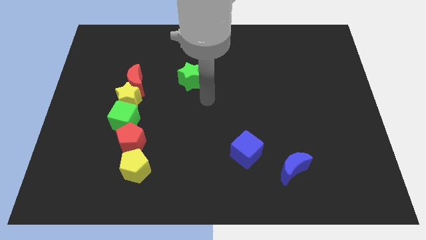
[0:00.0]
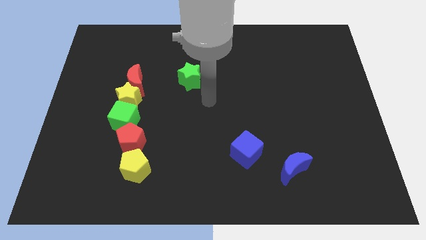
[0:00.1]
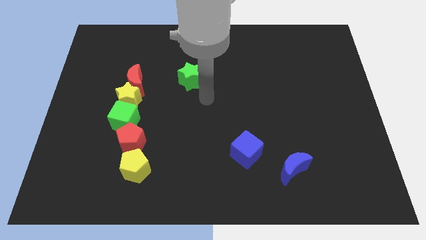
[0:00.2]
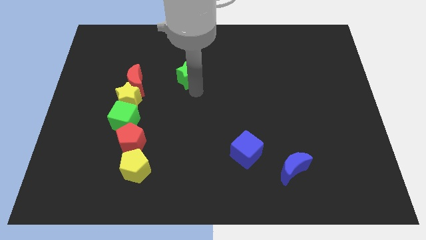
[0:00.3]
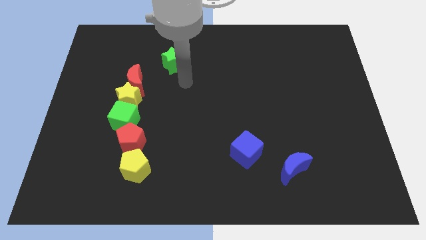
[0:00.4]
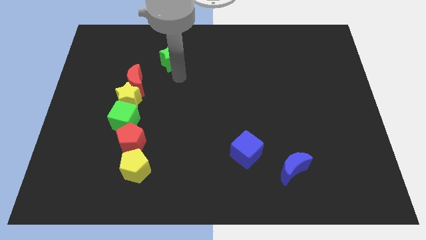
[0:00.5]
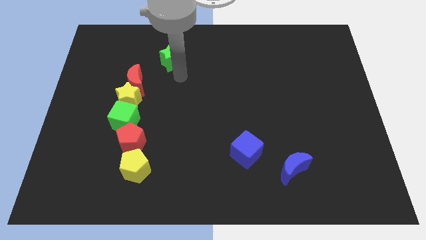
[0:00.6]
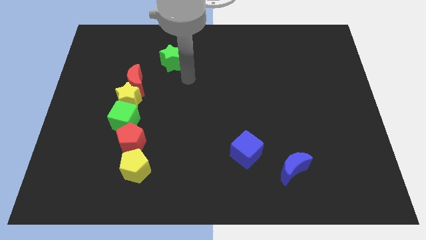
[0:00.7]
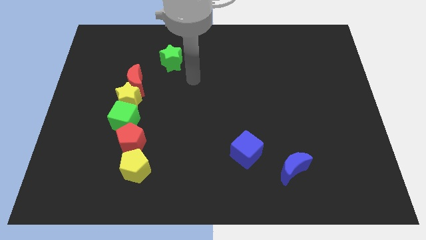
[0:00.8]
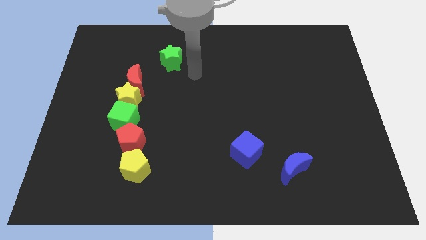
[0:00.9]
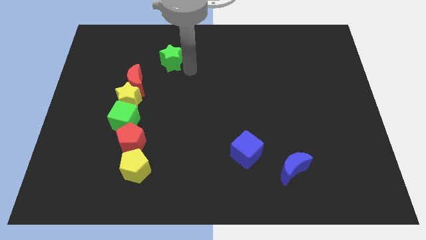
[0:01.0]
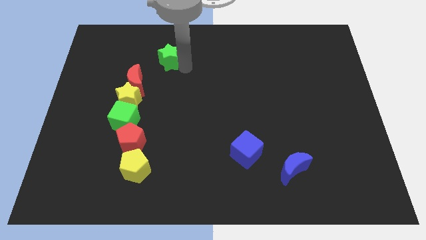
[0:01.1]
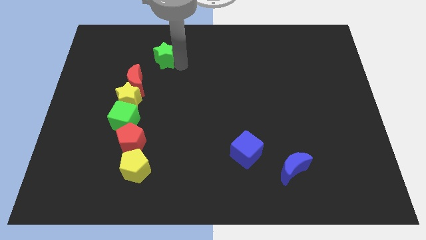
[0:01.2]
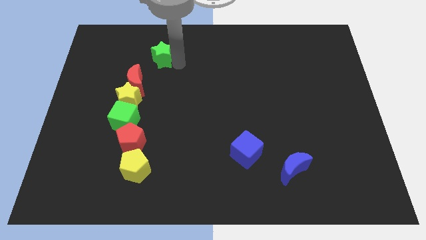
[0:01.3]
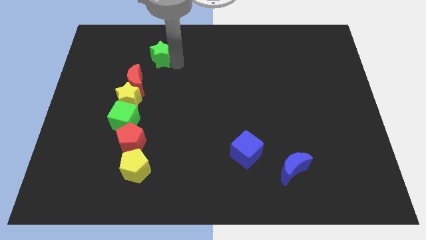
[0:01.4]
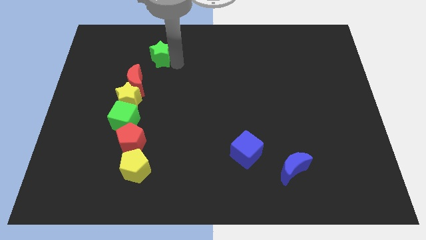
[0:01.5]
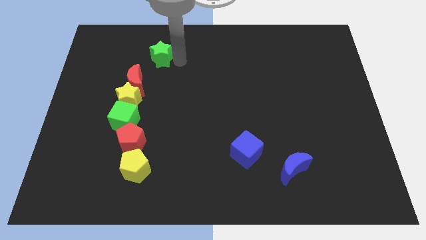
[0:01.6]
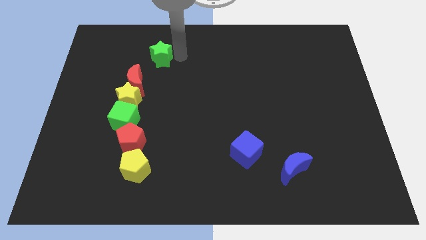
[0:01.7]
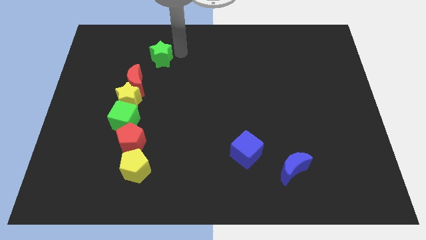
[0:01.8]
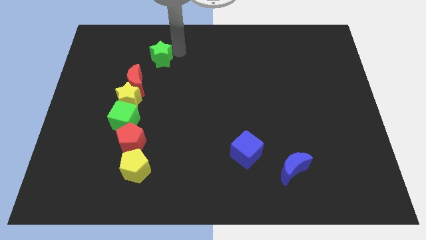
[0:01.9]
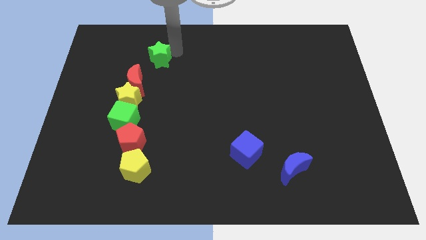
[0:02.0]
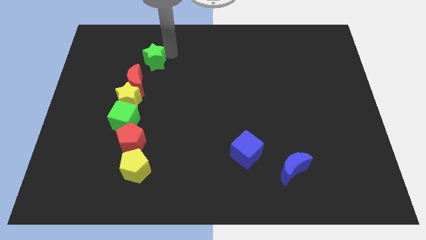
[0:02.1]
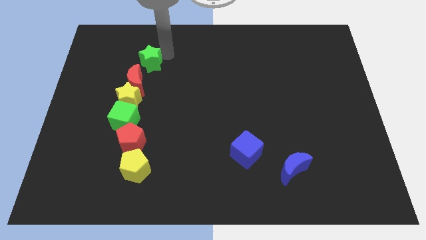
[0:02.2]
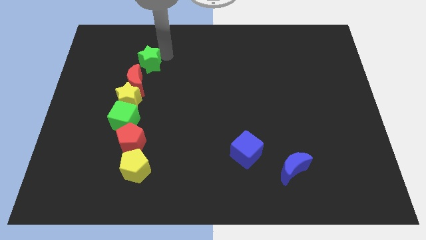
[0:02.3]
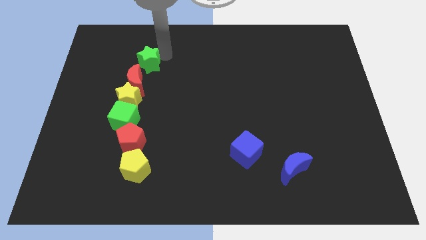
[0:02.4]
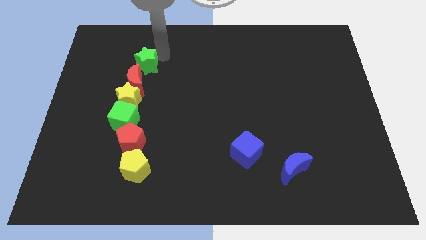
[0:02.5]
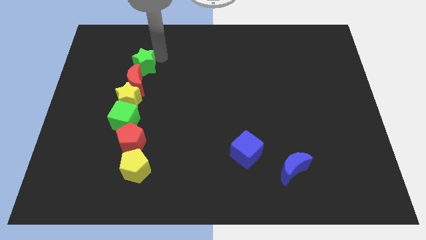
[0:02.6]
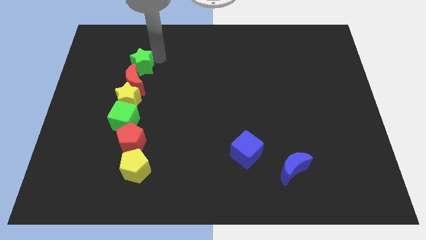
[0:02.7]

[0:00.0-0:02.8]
push the green star into the red moon

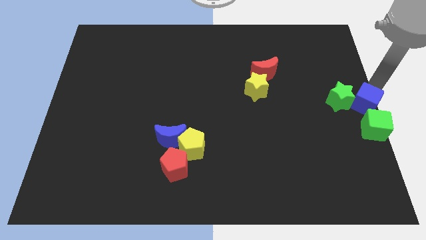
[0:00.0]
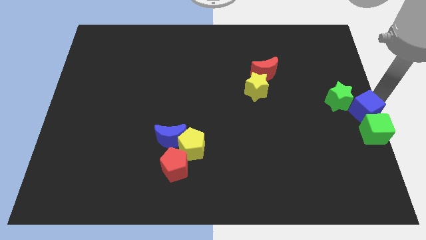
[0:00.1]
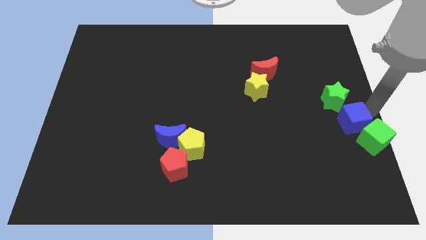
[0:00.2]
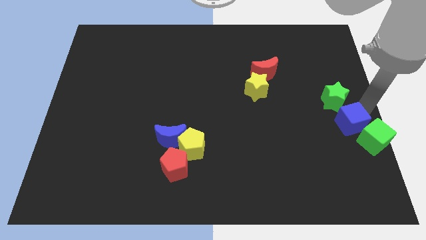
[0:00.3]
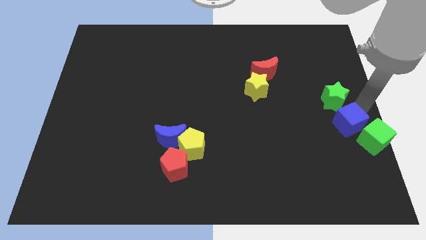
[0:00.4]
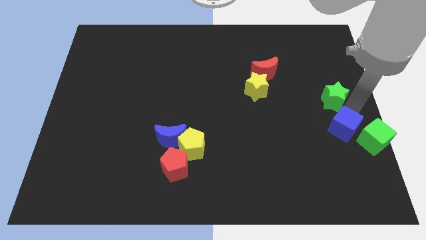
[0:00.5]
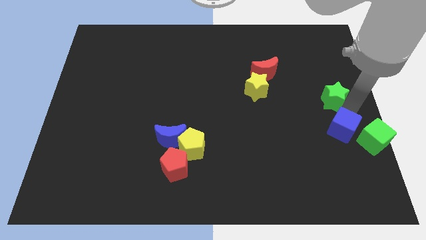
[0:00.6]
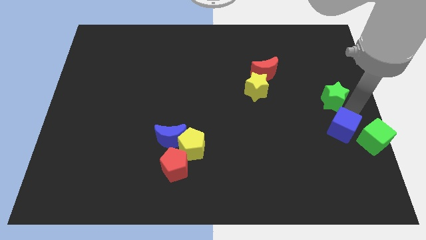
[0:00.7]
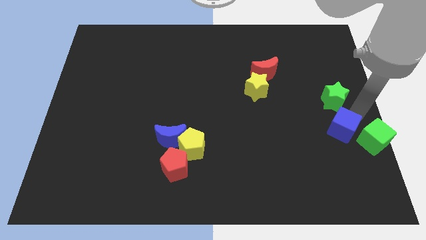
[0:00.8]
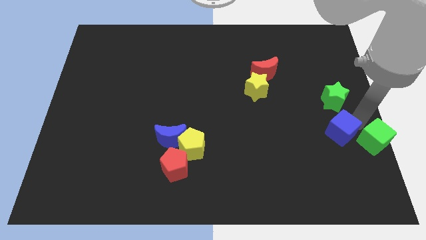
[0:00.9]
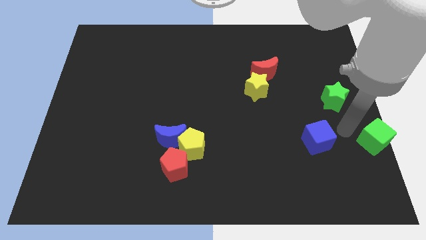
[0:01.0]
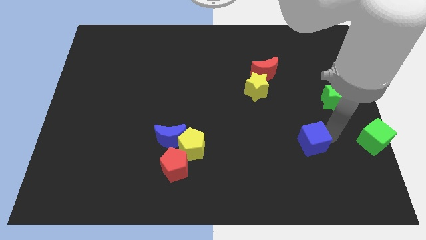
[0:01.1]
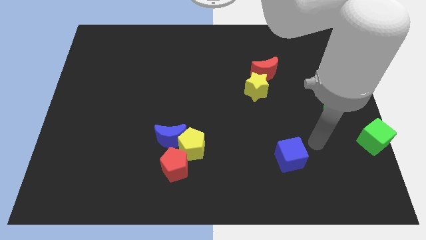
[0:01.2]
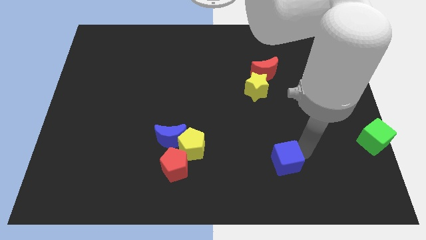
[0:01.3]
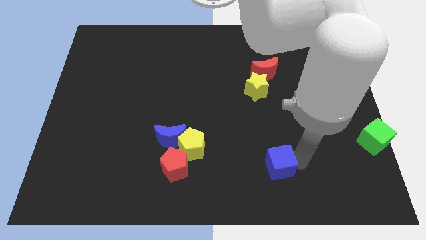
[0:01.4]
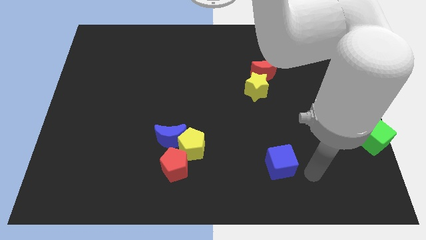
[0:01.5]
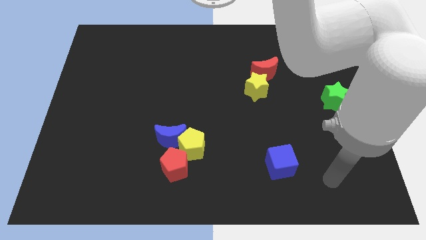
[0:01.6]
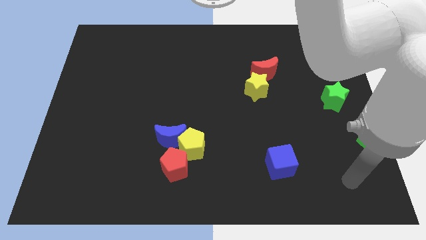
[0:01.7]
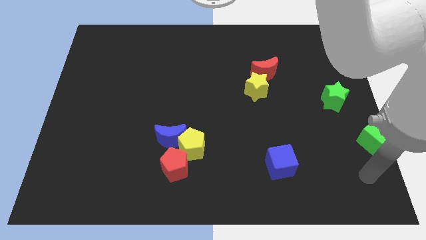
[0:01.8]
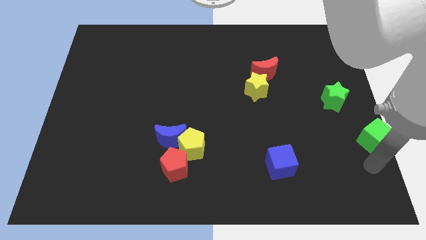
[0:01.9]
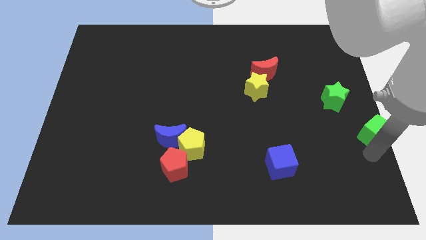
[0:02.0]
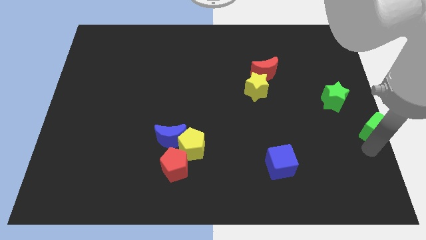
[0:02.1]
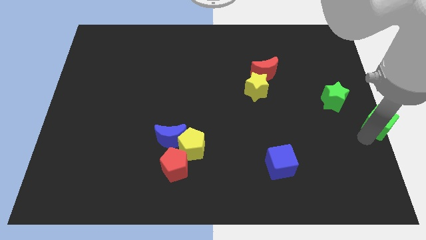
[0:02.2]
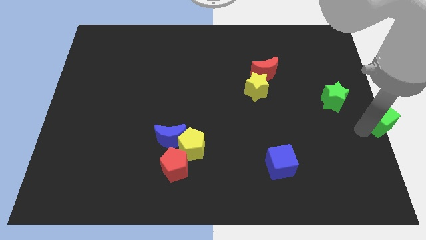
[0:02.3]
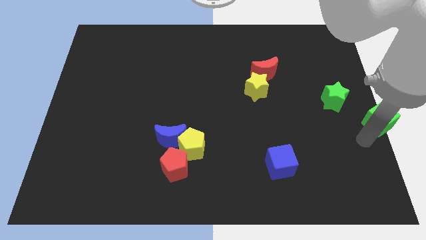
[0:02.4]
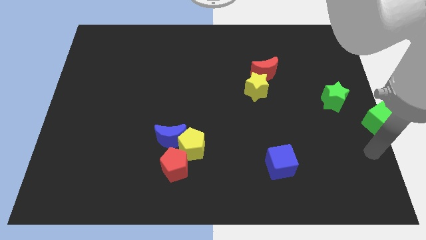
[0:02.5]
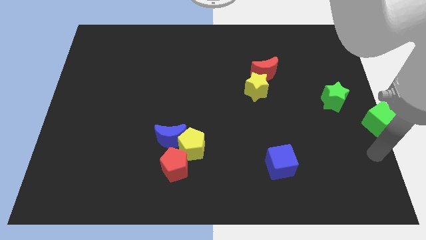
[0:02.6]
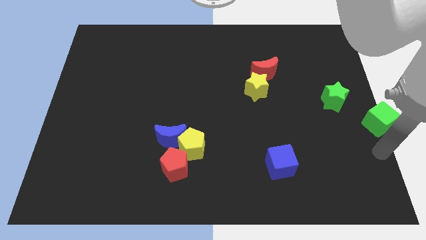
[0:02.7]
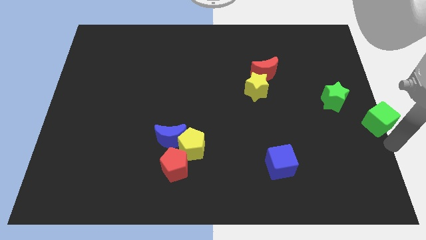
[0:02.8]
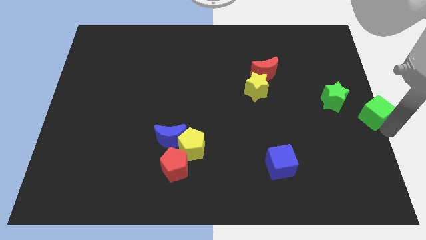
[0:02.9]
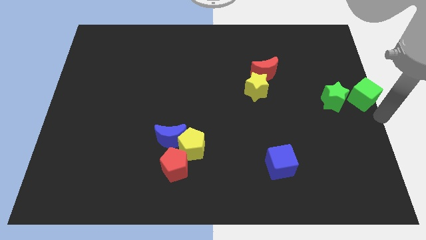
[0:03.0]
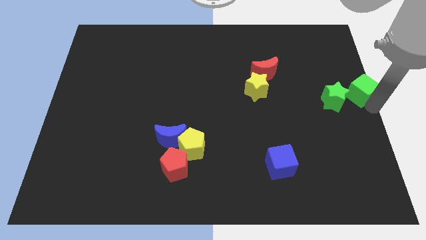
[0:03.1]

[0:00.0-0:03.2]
separate the blue cube from the green cube

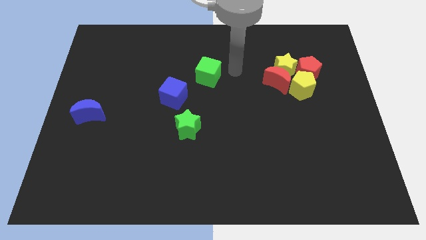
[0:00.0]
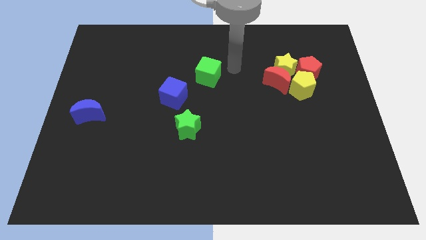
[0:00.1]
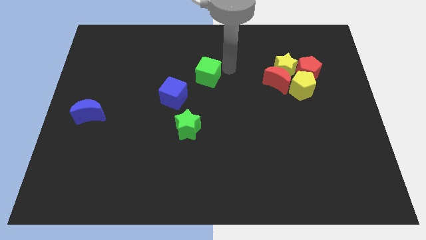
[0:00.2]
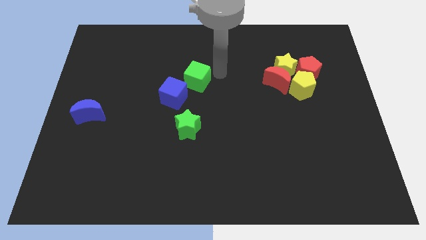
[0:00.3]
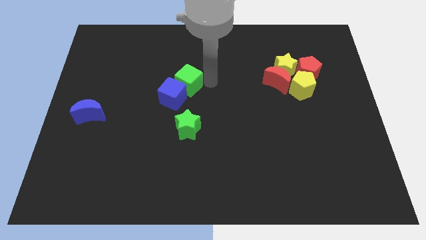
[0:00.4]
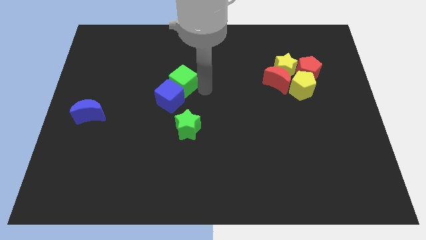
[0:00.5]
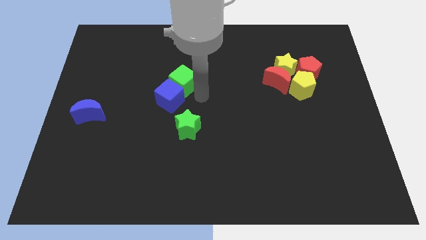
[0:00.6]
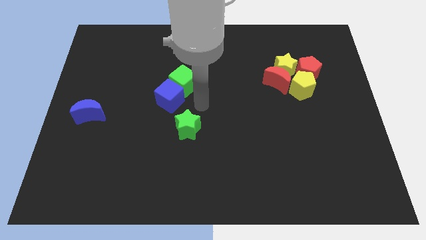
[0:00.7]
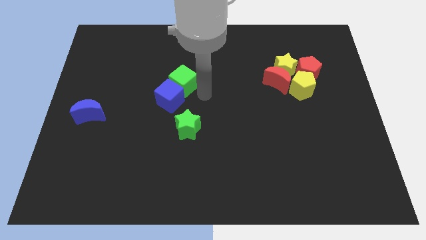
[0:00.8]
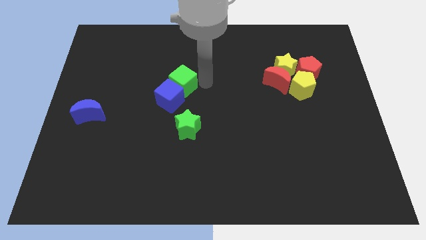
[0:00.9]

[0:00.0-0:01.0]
push green cube into the blue cube

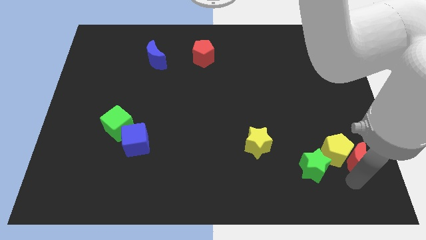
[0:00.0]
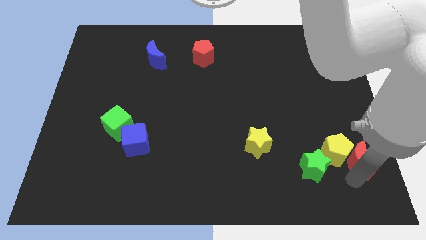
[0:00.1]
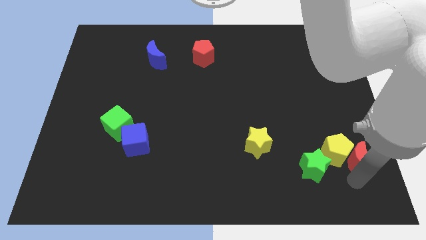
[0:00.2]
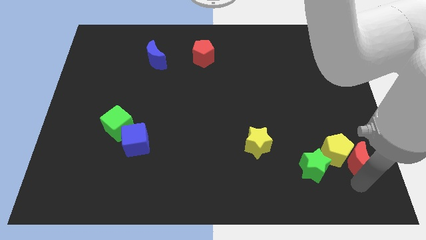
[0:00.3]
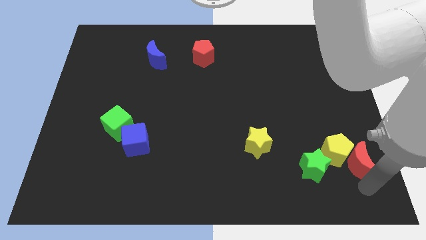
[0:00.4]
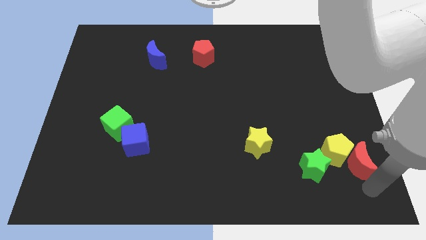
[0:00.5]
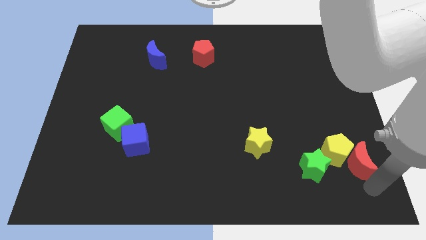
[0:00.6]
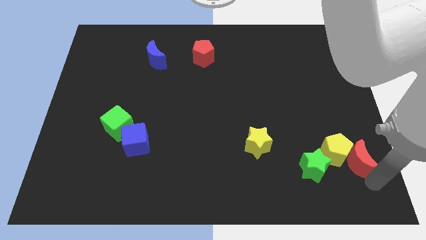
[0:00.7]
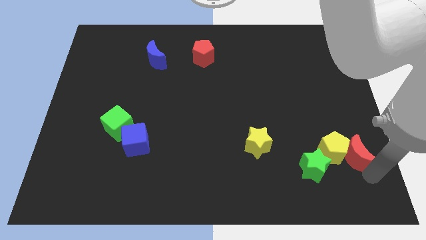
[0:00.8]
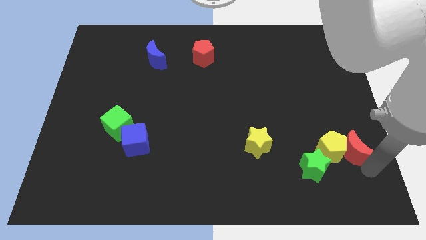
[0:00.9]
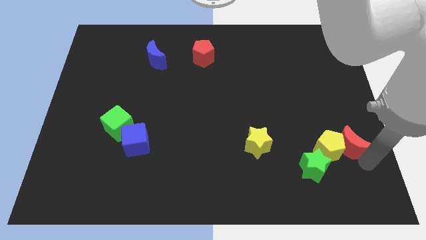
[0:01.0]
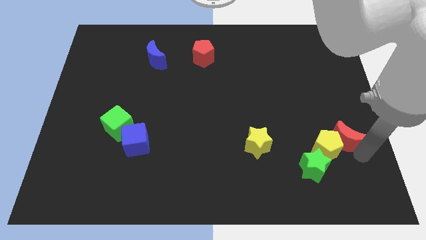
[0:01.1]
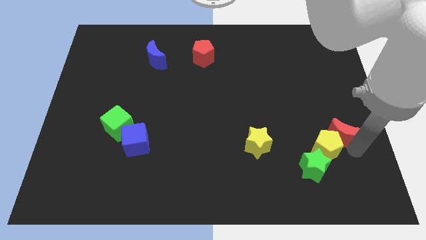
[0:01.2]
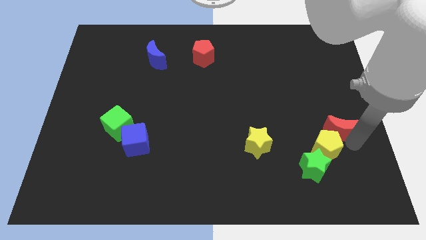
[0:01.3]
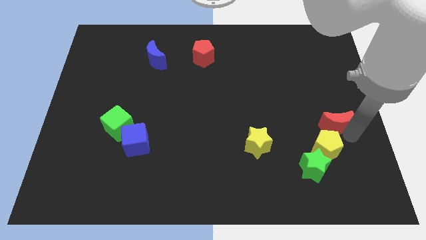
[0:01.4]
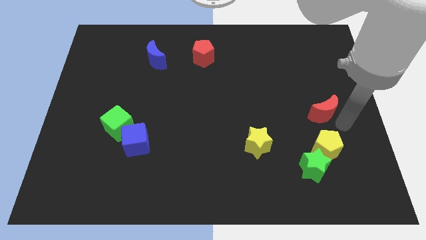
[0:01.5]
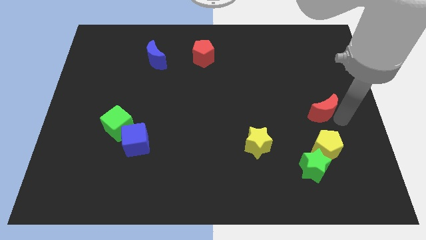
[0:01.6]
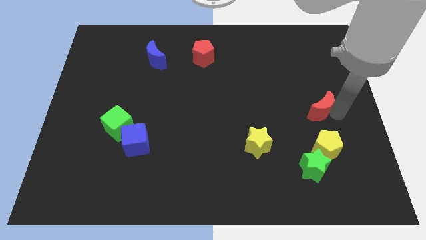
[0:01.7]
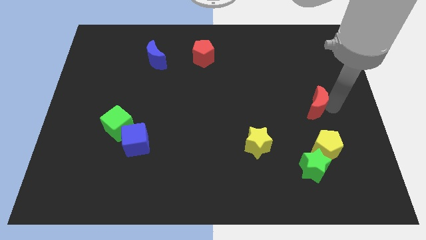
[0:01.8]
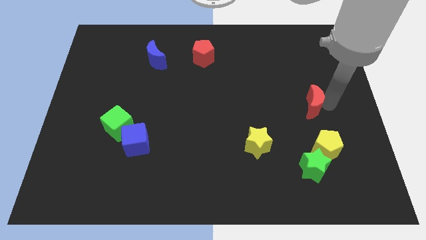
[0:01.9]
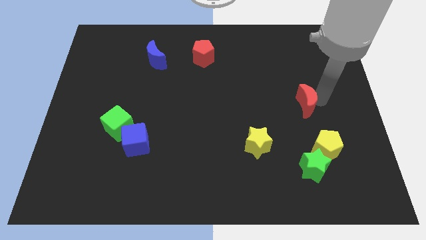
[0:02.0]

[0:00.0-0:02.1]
separate red moon from yellow pentagon

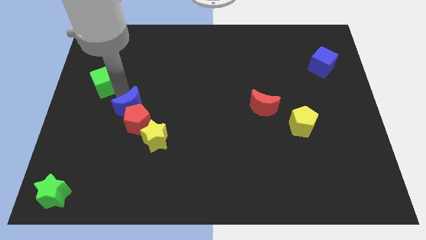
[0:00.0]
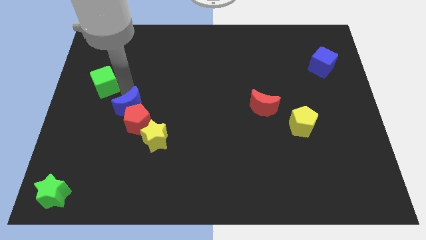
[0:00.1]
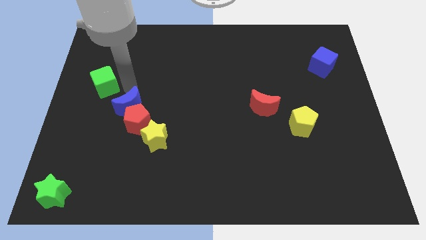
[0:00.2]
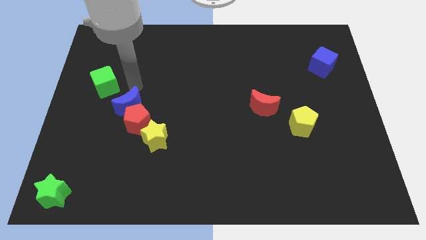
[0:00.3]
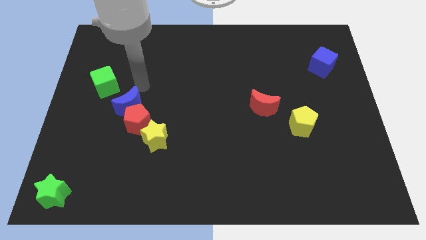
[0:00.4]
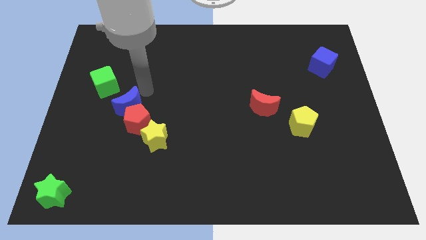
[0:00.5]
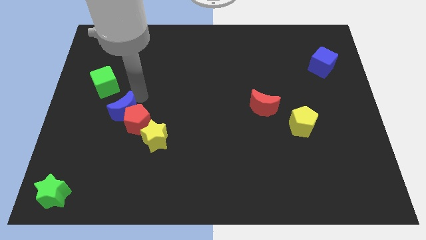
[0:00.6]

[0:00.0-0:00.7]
place the blue moon in between the green cube and red pentagon
